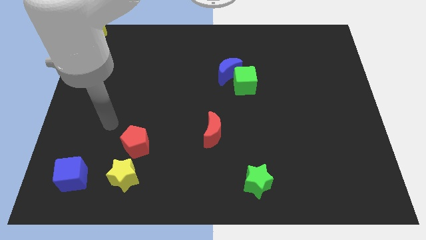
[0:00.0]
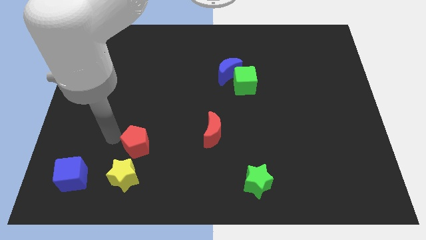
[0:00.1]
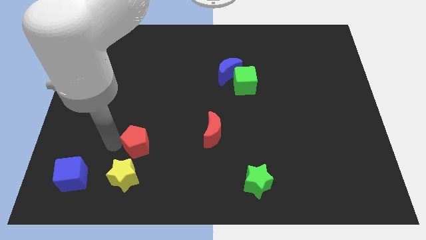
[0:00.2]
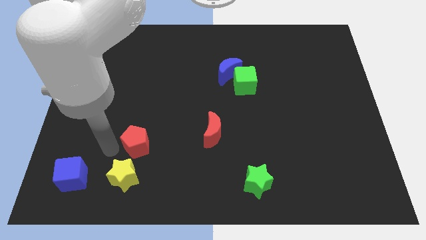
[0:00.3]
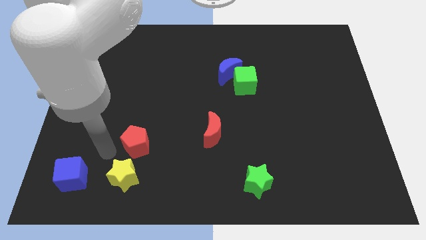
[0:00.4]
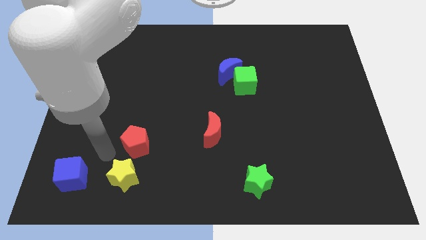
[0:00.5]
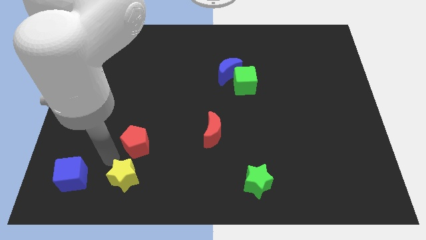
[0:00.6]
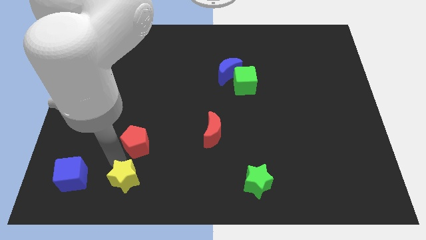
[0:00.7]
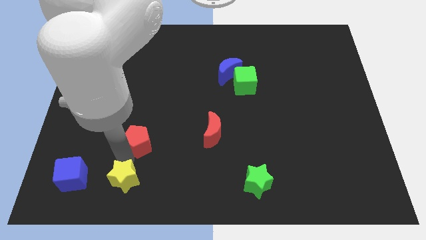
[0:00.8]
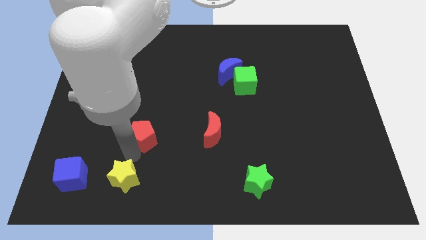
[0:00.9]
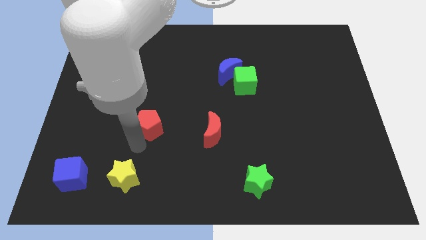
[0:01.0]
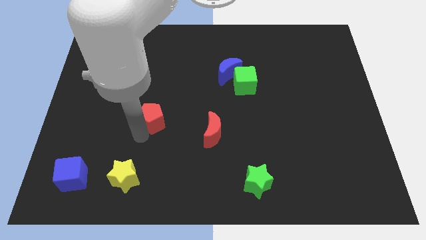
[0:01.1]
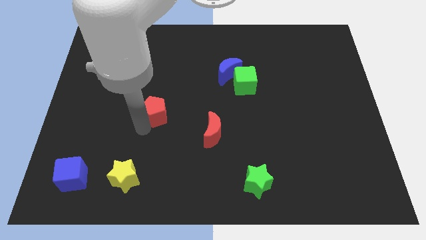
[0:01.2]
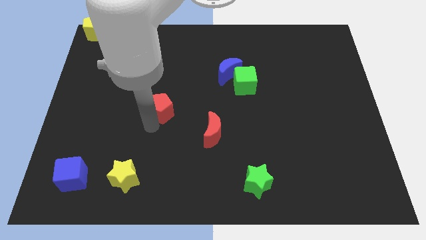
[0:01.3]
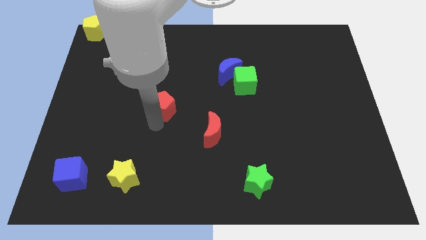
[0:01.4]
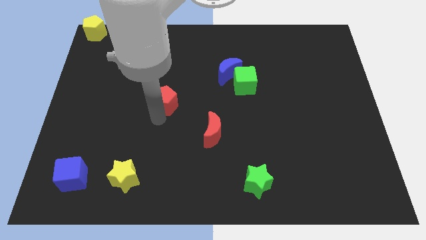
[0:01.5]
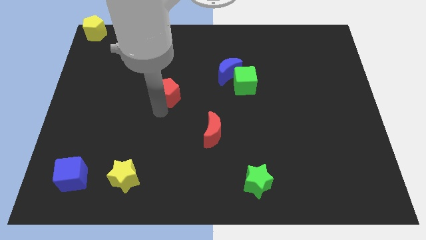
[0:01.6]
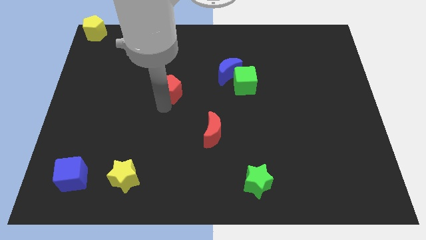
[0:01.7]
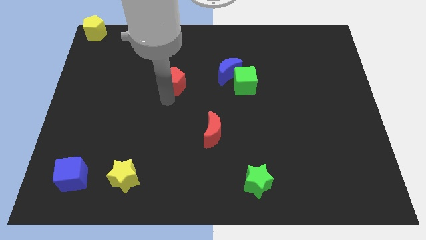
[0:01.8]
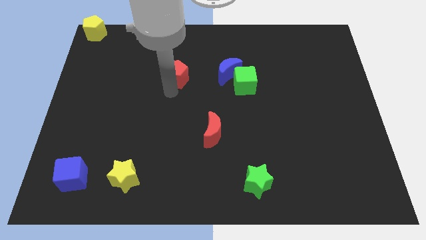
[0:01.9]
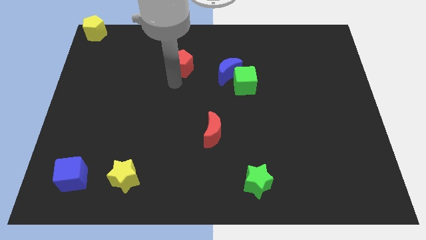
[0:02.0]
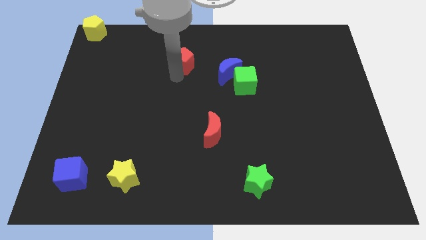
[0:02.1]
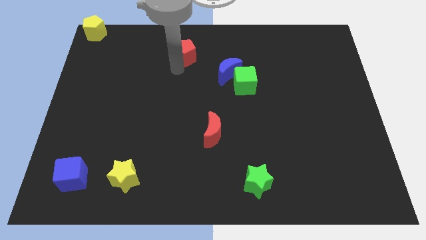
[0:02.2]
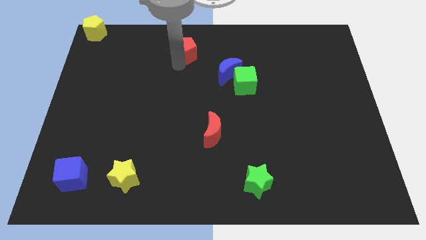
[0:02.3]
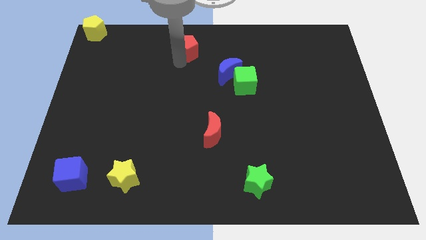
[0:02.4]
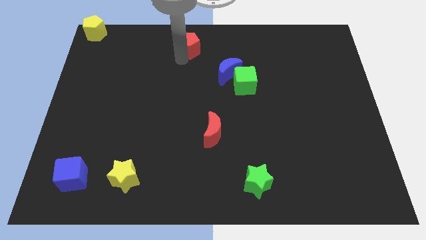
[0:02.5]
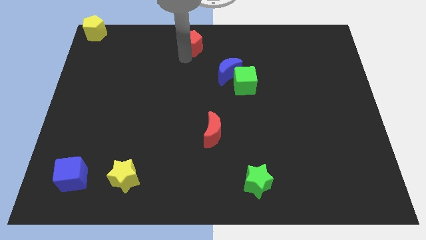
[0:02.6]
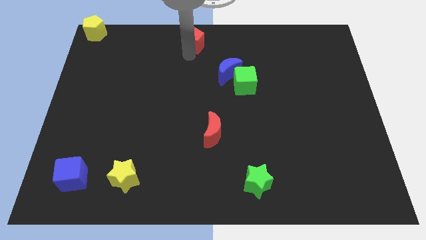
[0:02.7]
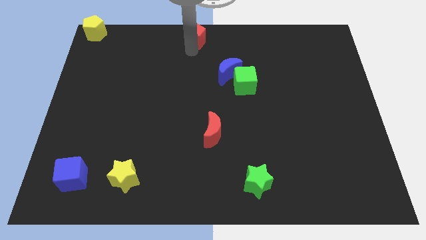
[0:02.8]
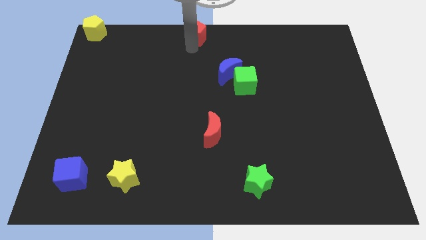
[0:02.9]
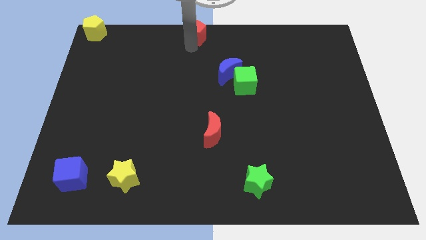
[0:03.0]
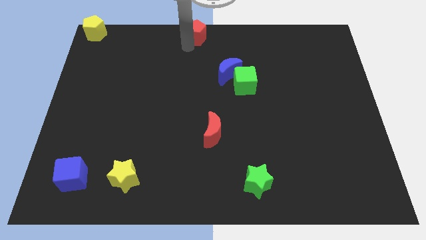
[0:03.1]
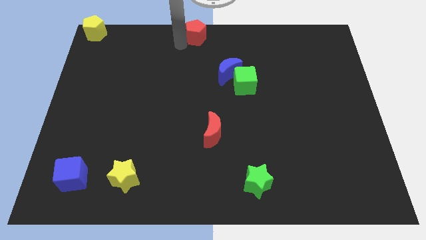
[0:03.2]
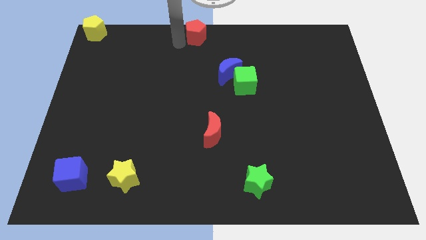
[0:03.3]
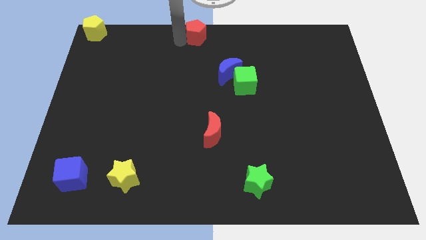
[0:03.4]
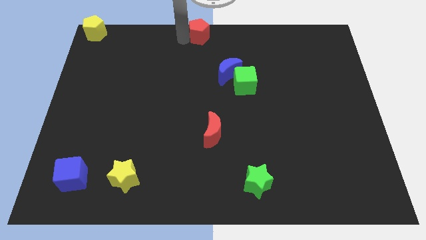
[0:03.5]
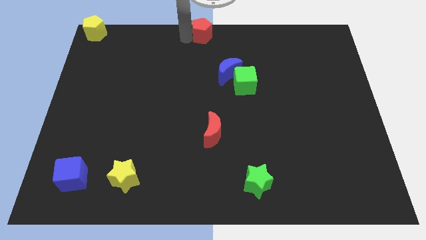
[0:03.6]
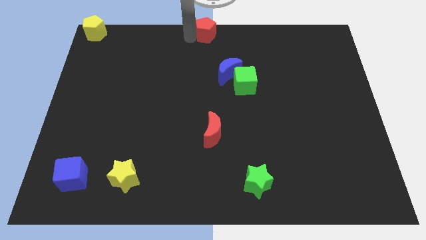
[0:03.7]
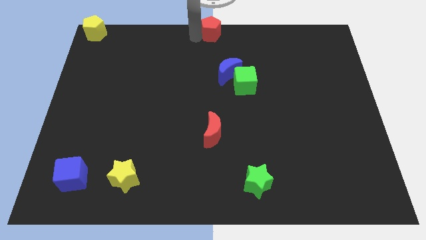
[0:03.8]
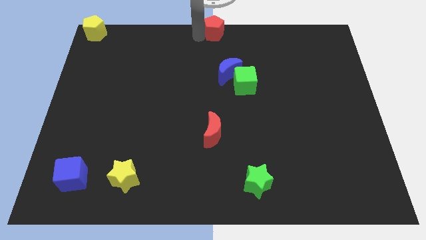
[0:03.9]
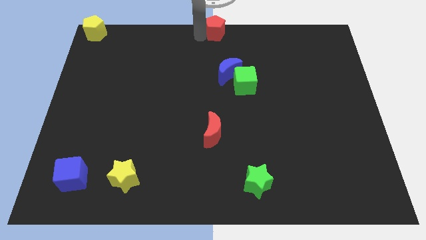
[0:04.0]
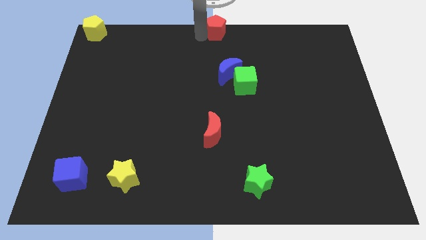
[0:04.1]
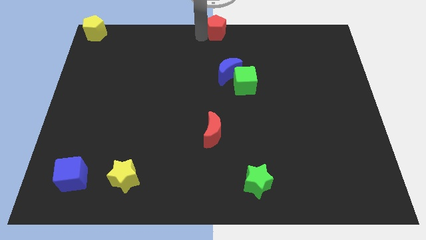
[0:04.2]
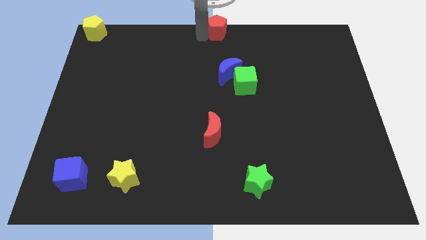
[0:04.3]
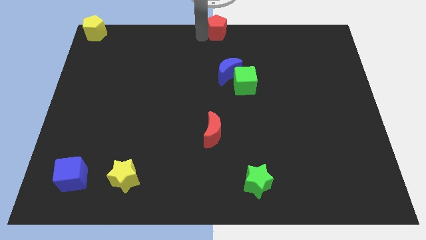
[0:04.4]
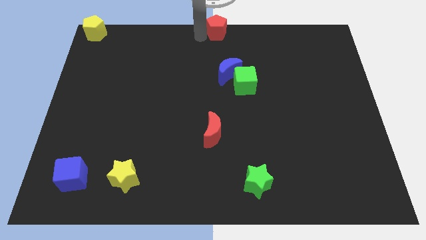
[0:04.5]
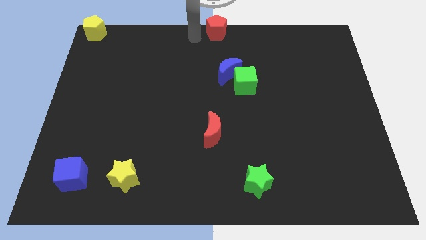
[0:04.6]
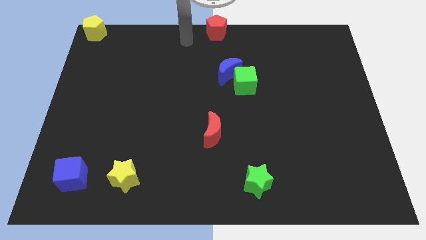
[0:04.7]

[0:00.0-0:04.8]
put the red pentagon at the top center of the board

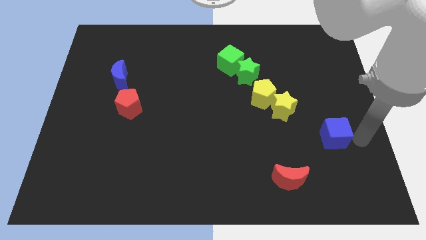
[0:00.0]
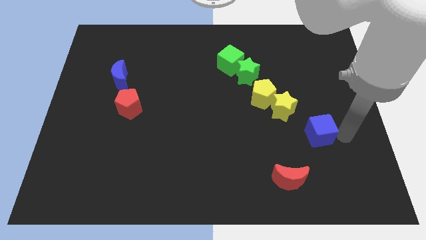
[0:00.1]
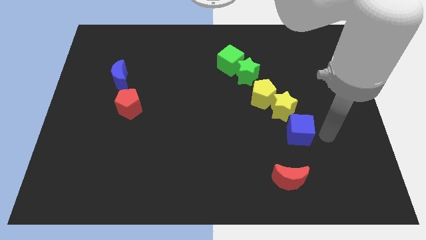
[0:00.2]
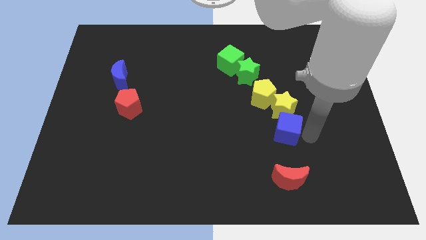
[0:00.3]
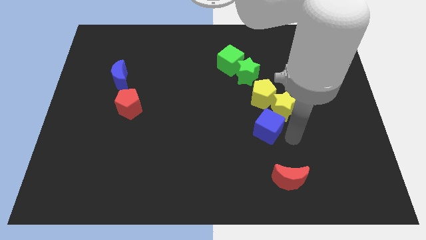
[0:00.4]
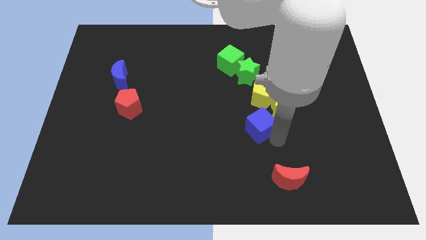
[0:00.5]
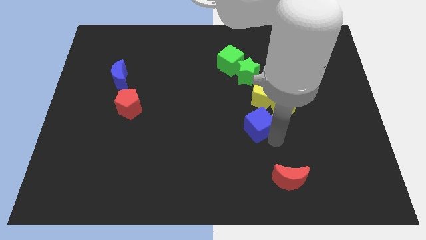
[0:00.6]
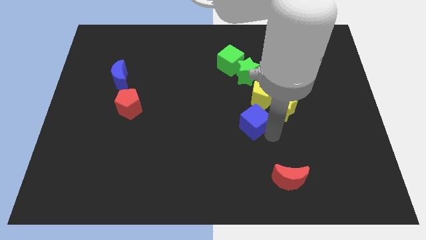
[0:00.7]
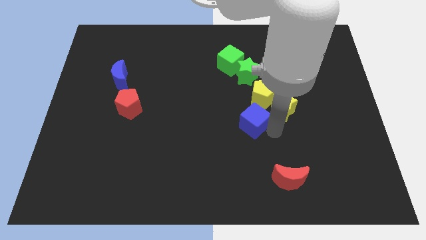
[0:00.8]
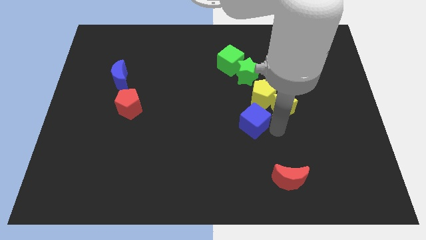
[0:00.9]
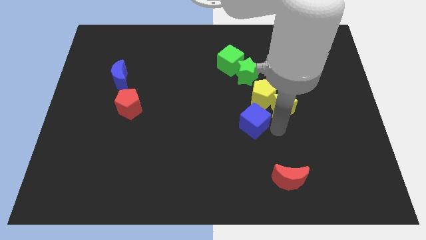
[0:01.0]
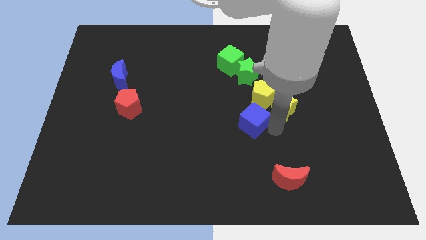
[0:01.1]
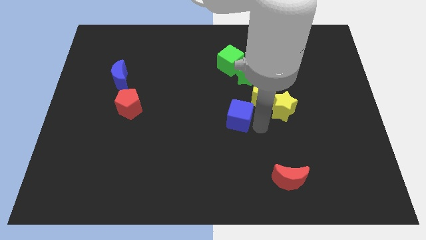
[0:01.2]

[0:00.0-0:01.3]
slide the blue cube to the bottom left side of the yellow pentagon

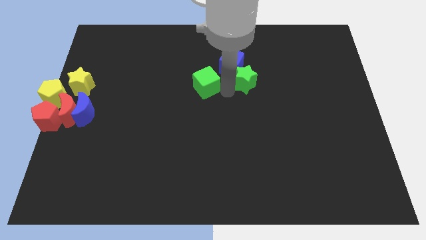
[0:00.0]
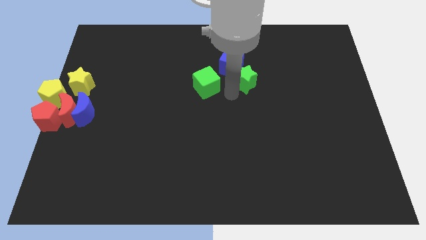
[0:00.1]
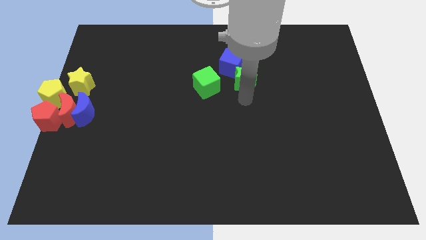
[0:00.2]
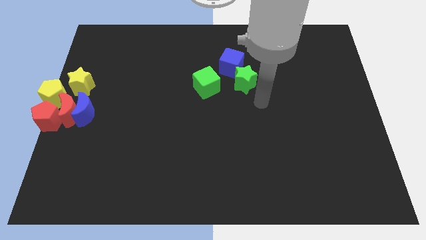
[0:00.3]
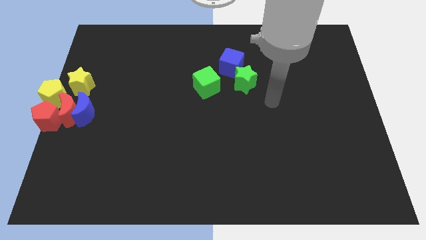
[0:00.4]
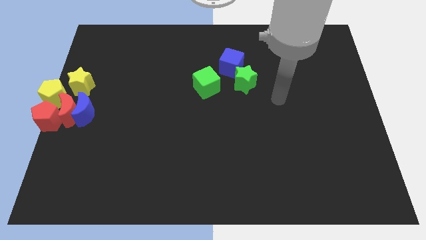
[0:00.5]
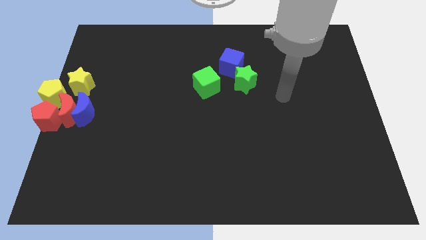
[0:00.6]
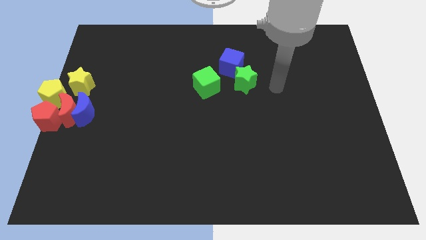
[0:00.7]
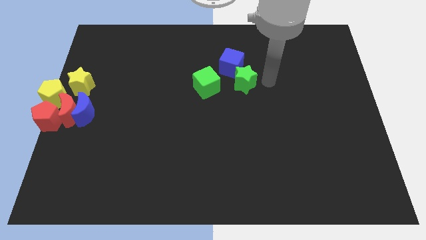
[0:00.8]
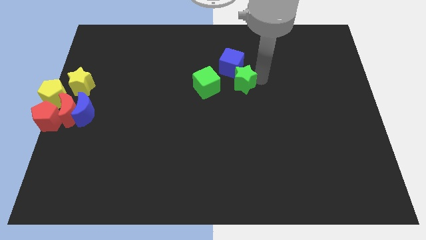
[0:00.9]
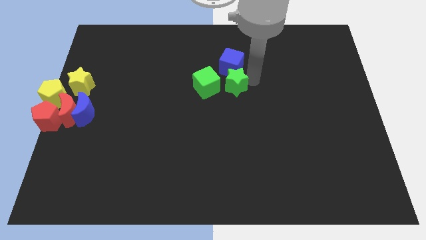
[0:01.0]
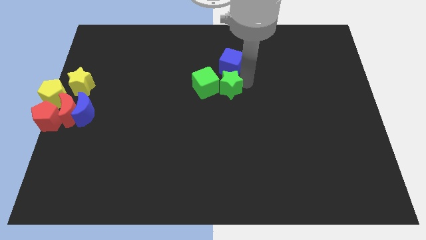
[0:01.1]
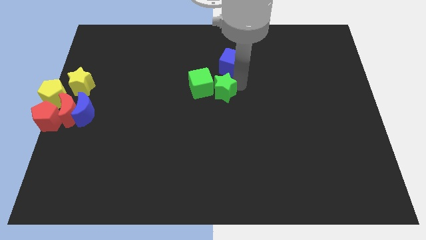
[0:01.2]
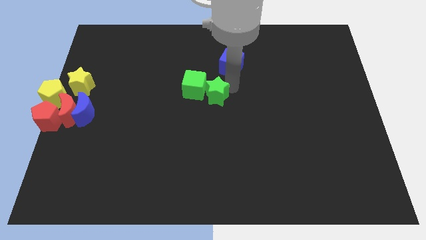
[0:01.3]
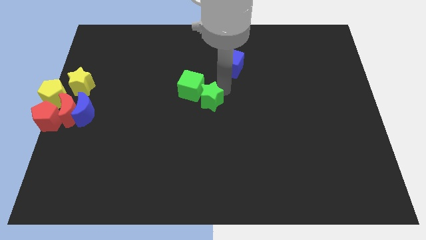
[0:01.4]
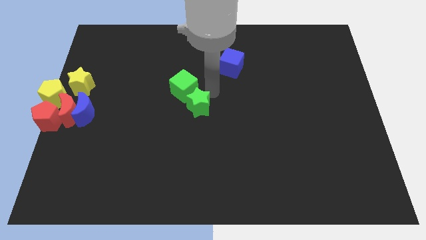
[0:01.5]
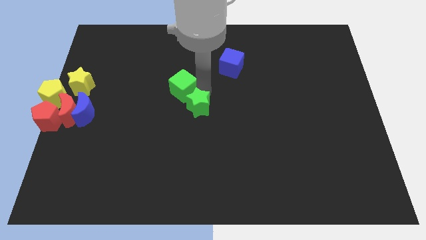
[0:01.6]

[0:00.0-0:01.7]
push the green blocks towards the left side of the board

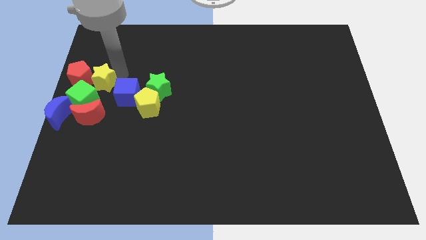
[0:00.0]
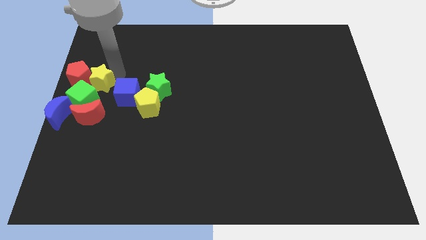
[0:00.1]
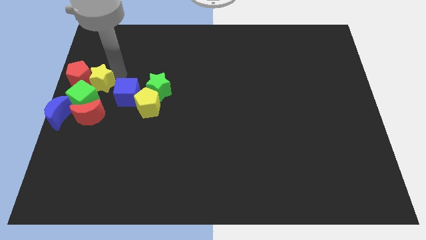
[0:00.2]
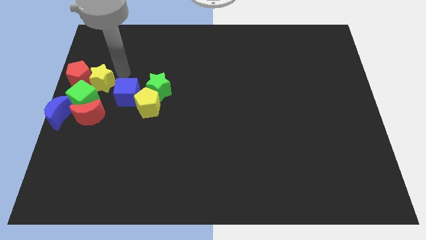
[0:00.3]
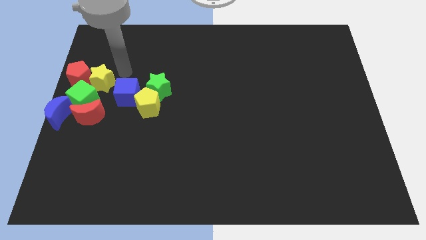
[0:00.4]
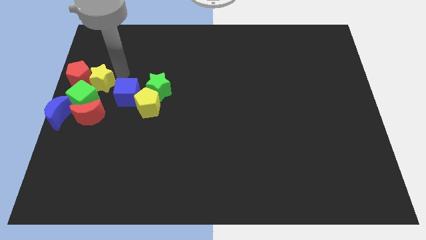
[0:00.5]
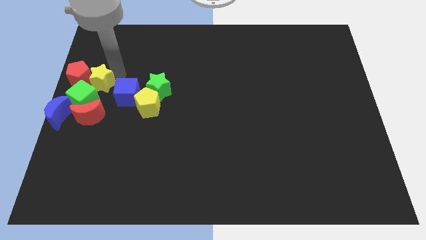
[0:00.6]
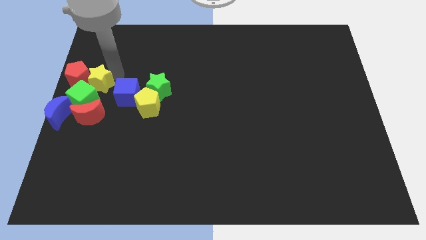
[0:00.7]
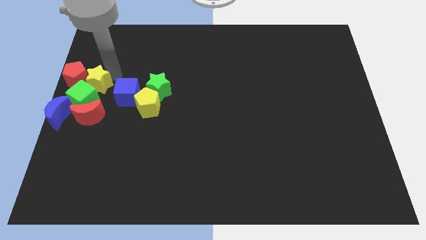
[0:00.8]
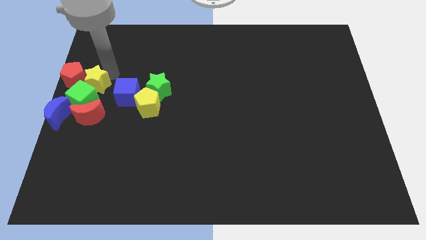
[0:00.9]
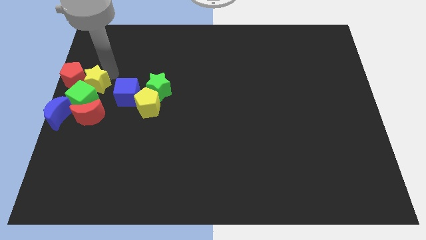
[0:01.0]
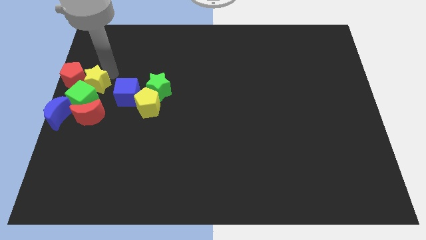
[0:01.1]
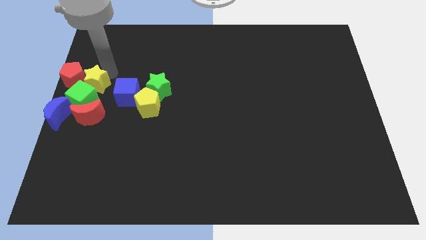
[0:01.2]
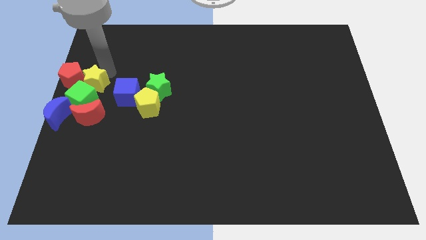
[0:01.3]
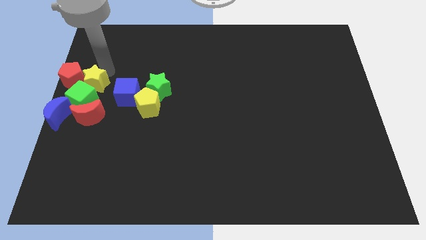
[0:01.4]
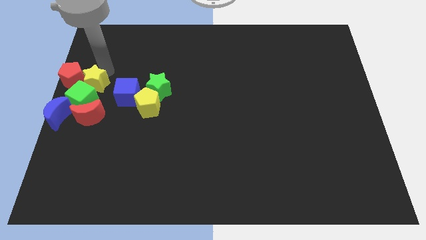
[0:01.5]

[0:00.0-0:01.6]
push the yellow star in between the red pentagon and blue cube at the left corner
